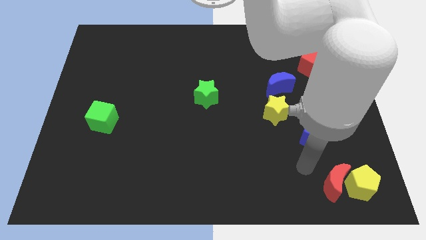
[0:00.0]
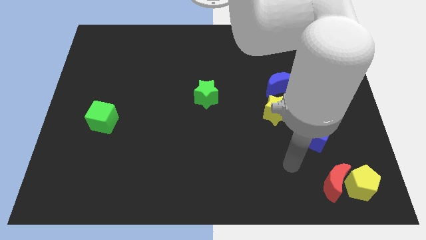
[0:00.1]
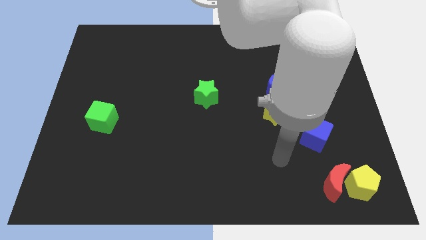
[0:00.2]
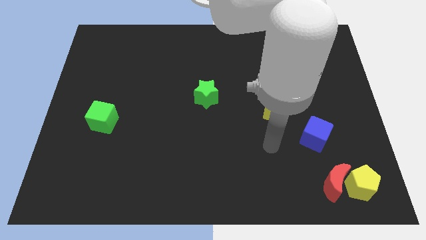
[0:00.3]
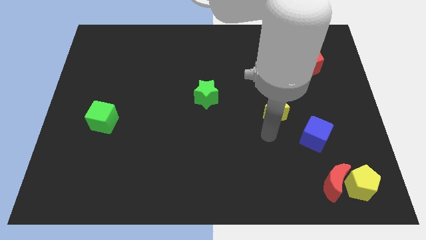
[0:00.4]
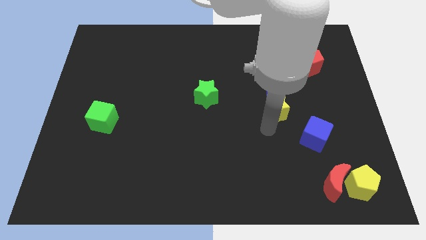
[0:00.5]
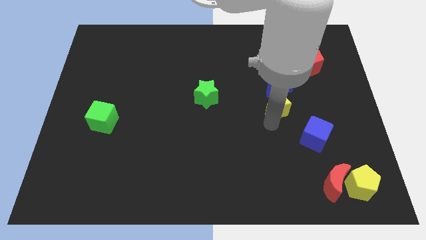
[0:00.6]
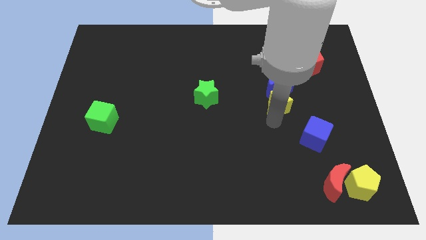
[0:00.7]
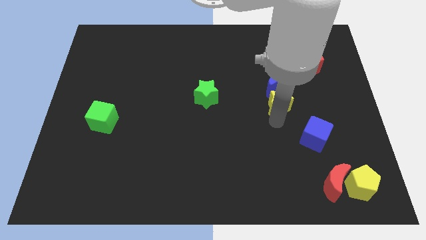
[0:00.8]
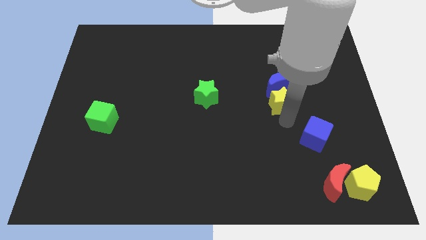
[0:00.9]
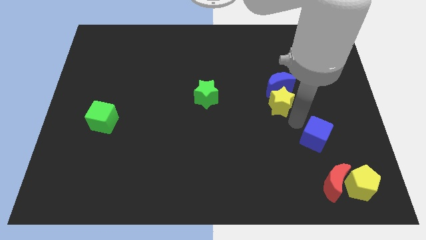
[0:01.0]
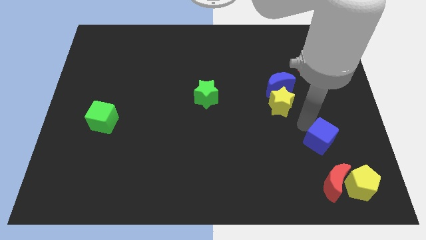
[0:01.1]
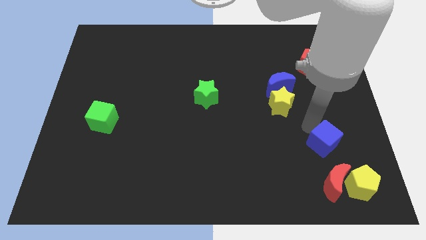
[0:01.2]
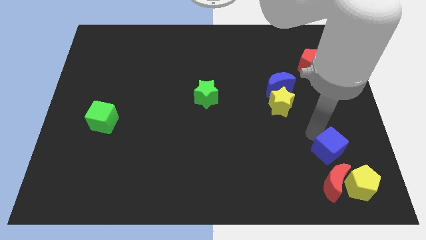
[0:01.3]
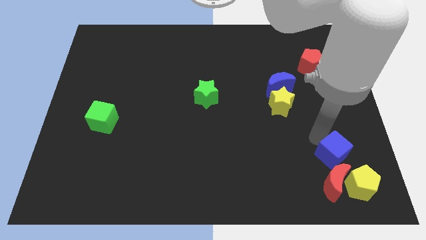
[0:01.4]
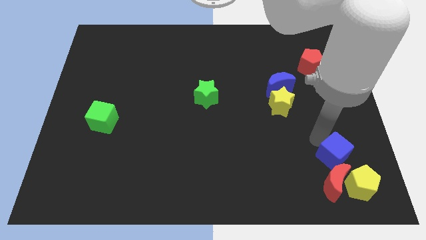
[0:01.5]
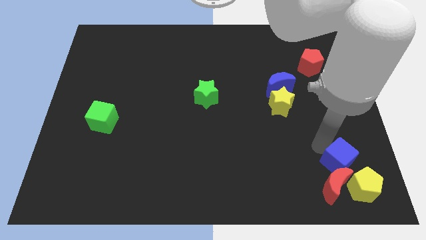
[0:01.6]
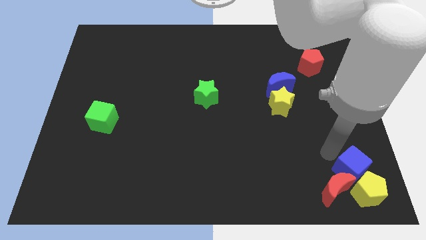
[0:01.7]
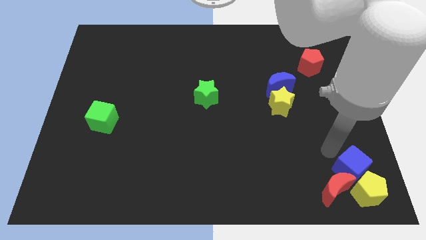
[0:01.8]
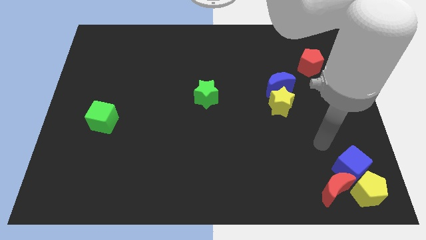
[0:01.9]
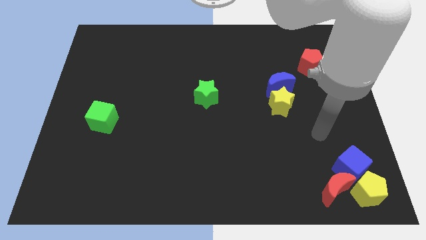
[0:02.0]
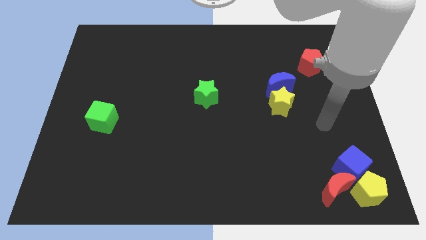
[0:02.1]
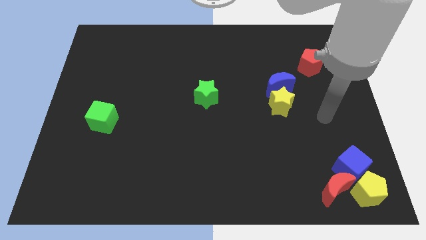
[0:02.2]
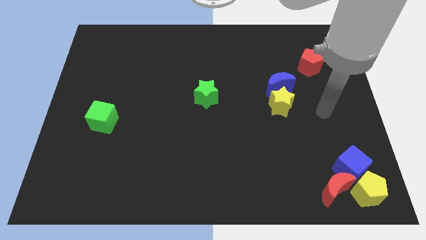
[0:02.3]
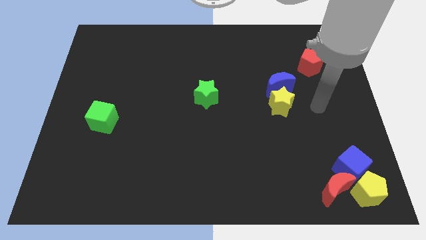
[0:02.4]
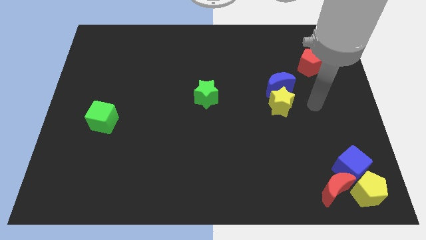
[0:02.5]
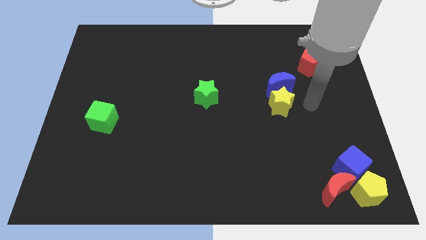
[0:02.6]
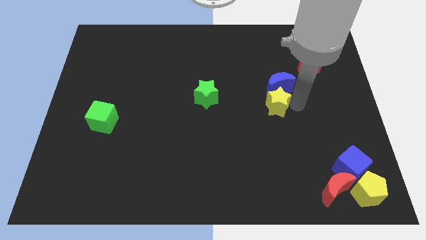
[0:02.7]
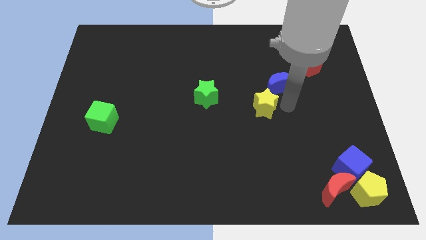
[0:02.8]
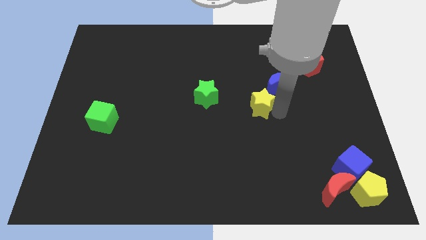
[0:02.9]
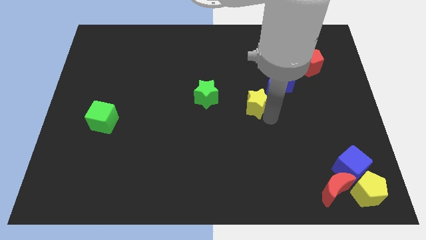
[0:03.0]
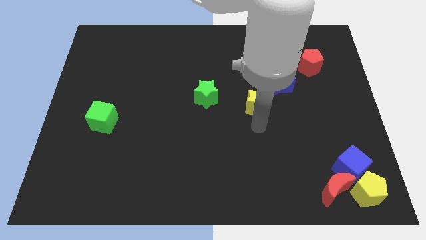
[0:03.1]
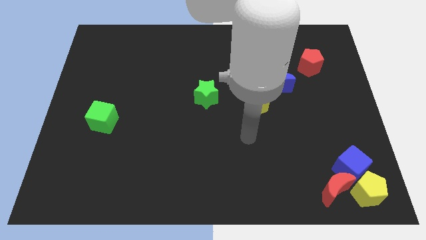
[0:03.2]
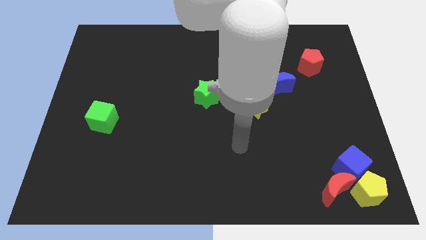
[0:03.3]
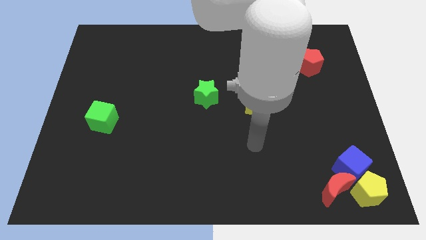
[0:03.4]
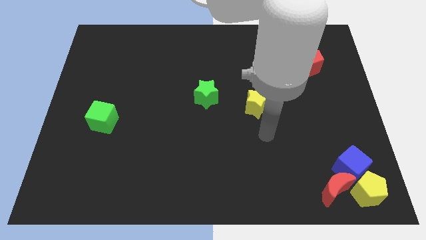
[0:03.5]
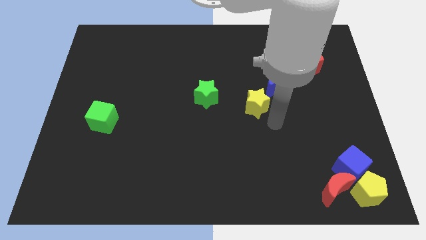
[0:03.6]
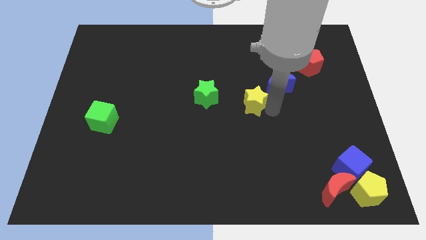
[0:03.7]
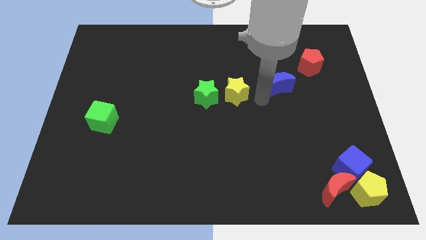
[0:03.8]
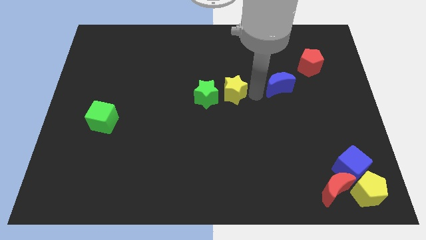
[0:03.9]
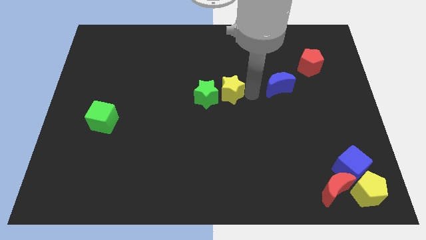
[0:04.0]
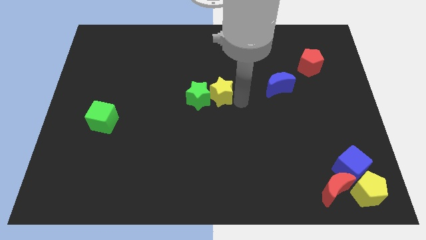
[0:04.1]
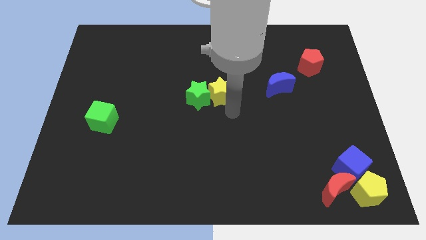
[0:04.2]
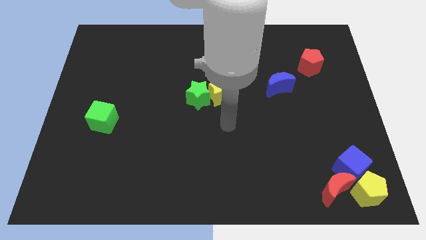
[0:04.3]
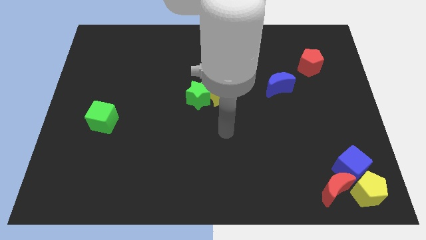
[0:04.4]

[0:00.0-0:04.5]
push the yellow star into the green star

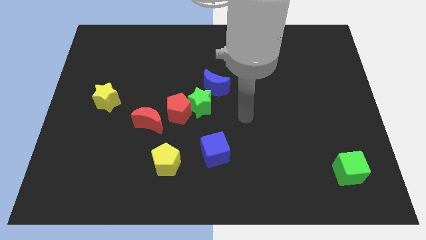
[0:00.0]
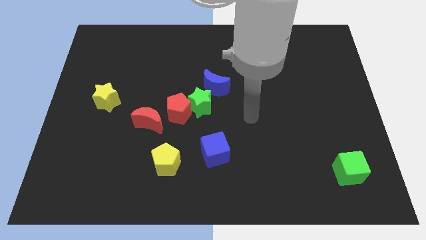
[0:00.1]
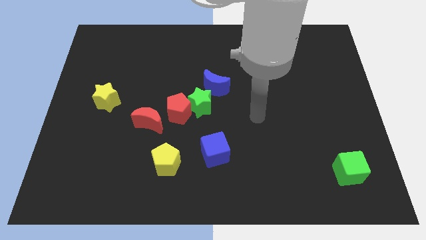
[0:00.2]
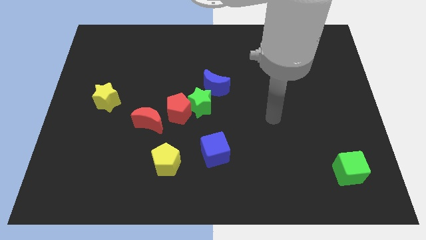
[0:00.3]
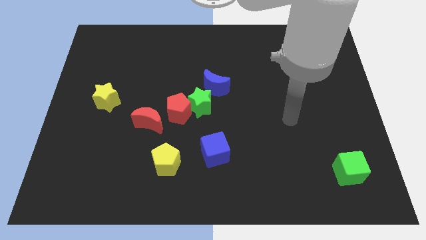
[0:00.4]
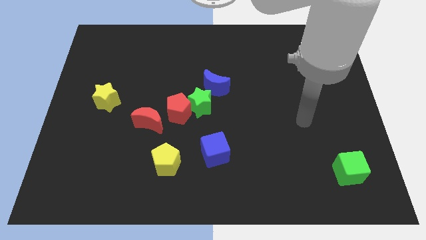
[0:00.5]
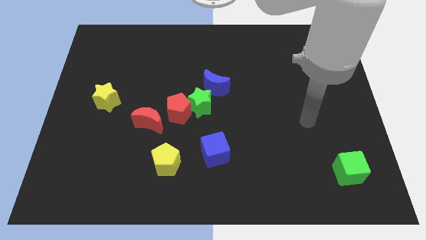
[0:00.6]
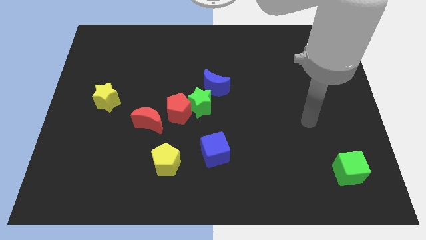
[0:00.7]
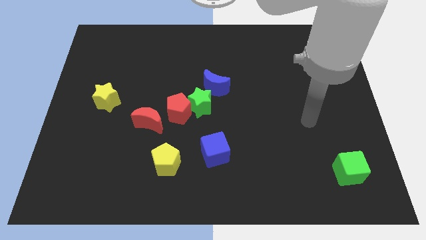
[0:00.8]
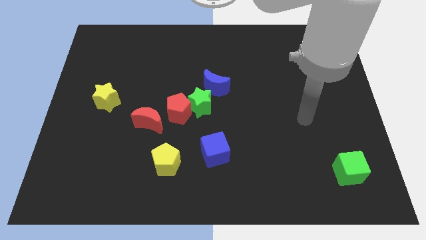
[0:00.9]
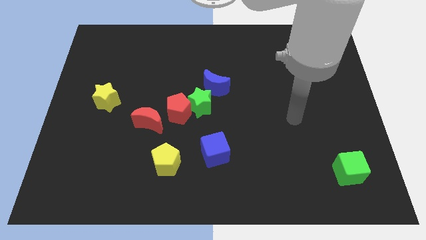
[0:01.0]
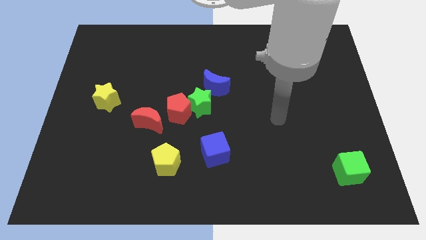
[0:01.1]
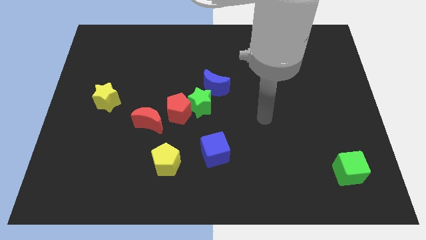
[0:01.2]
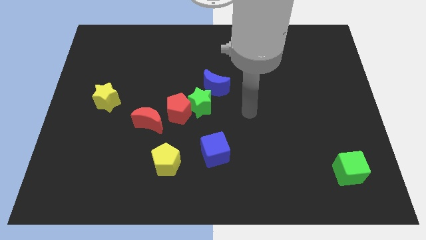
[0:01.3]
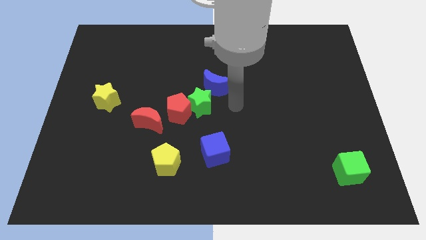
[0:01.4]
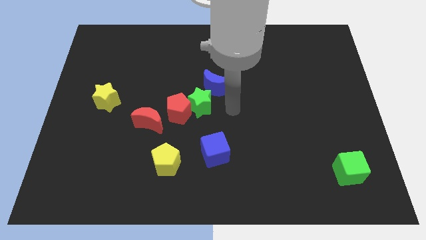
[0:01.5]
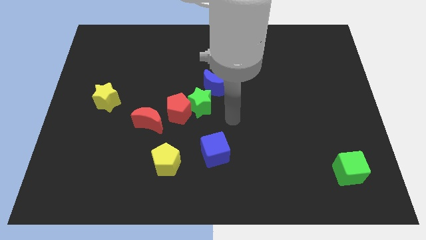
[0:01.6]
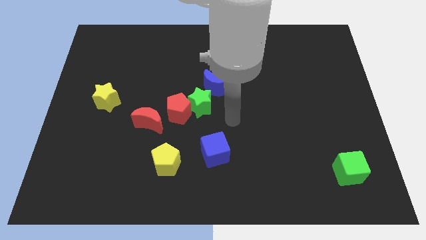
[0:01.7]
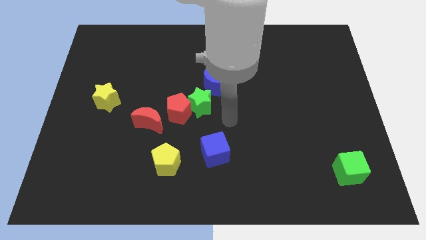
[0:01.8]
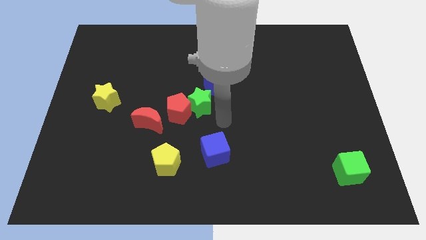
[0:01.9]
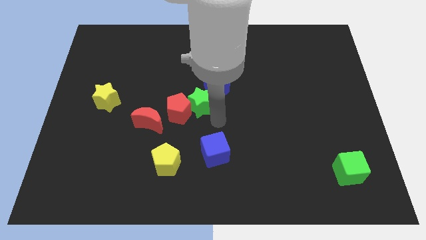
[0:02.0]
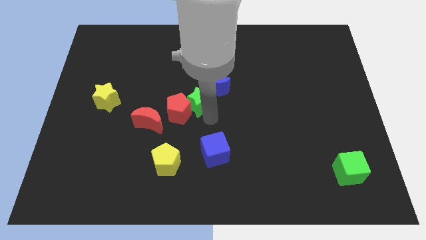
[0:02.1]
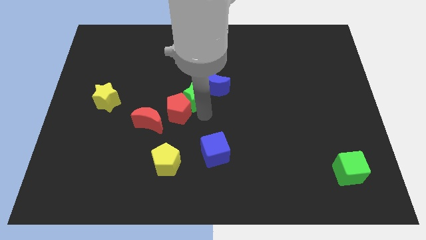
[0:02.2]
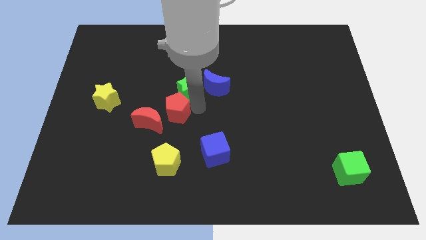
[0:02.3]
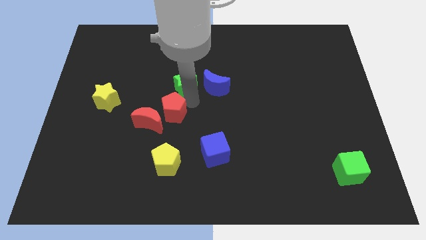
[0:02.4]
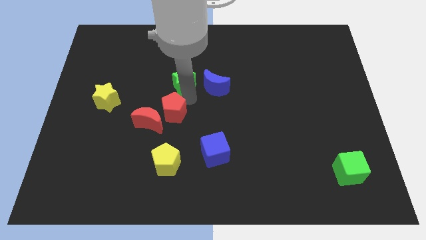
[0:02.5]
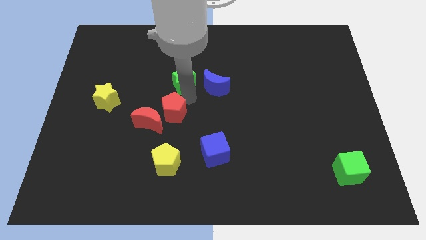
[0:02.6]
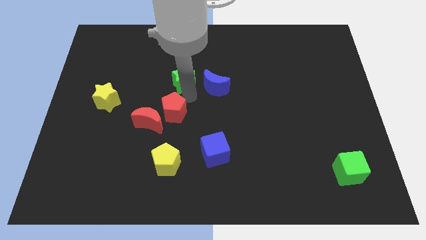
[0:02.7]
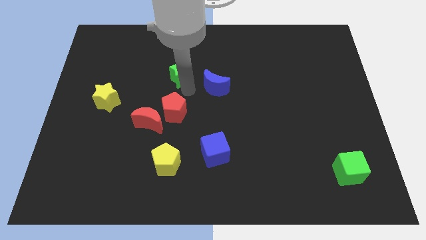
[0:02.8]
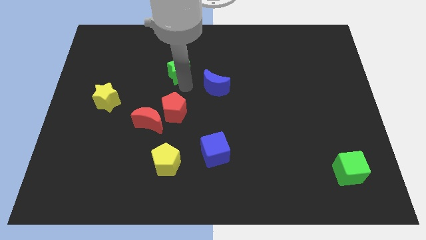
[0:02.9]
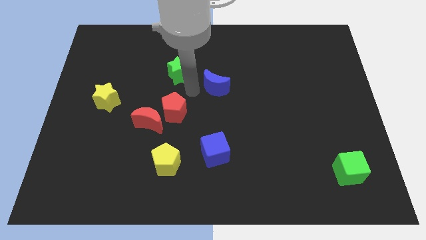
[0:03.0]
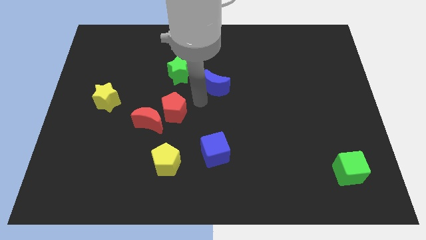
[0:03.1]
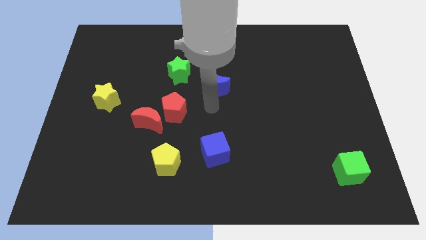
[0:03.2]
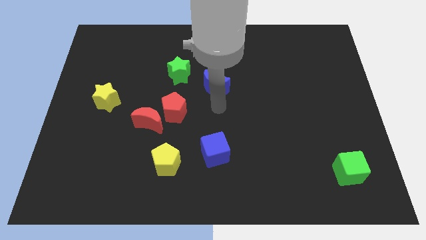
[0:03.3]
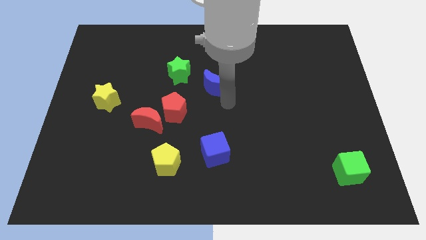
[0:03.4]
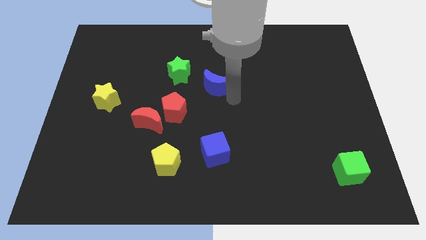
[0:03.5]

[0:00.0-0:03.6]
push the green star to the top of the red pentagon

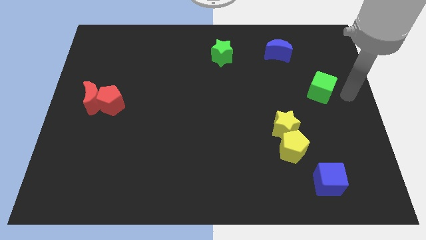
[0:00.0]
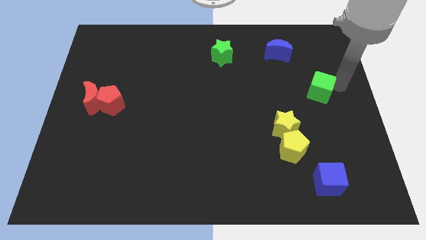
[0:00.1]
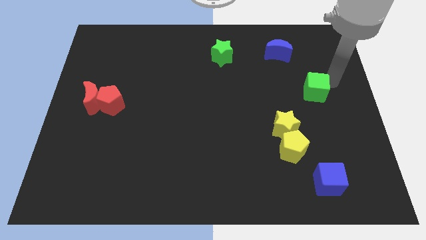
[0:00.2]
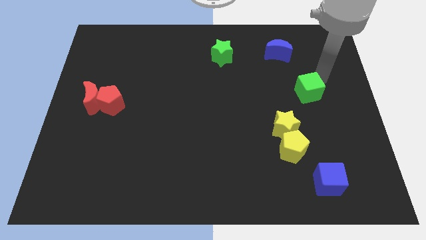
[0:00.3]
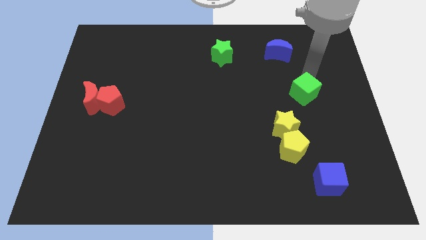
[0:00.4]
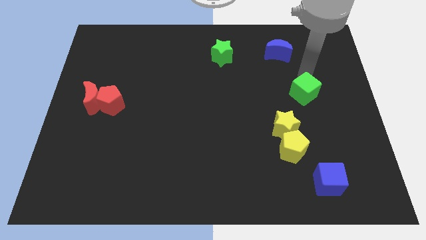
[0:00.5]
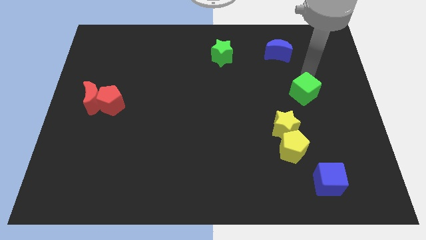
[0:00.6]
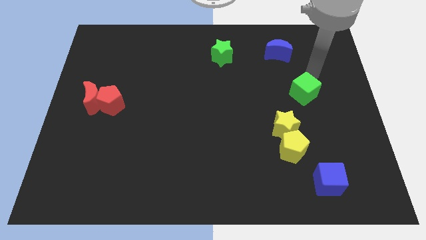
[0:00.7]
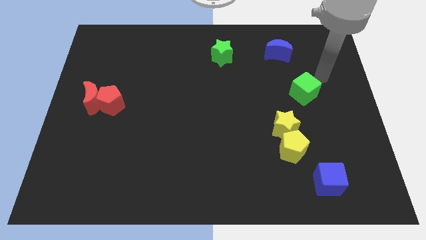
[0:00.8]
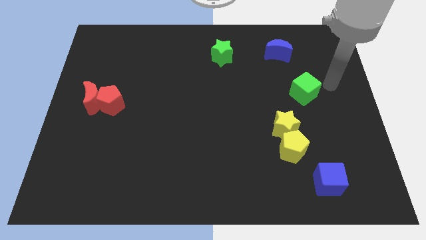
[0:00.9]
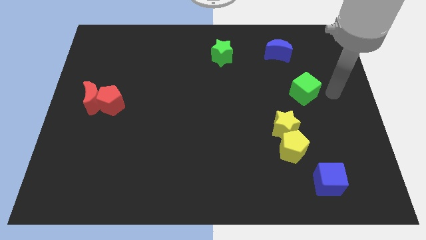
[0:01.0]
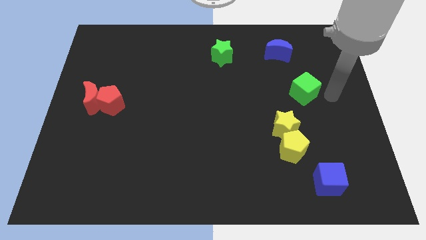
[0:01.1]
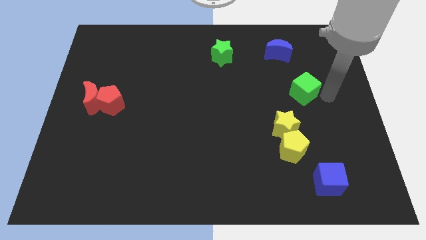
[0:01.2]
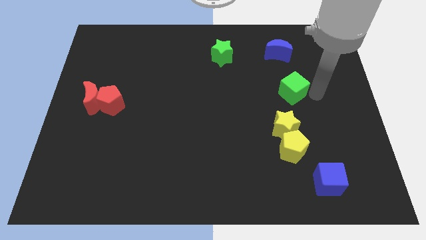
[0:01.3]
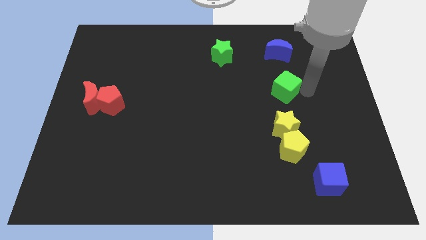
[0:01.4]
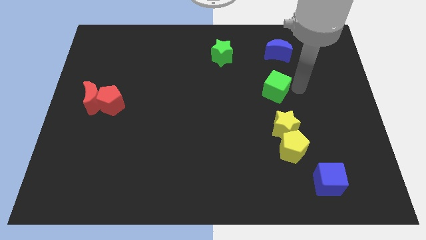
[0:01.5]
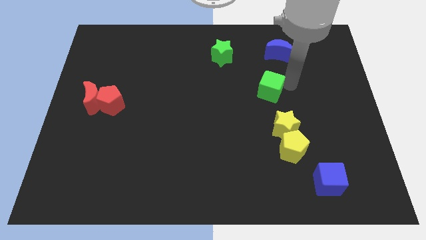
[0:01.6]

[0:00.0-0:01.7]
place the green cube in between blue crescent and yellow star
